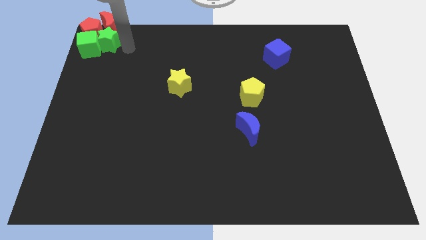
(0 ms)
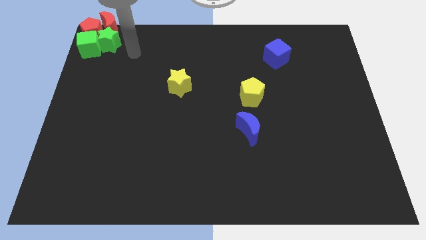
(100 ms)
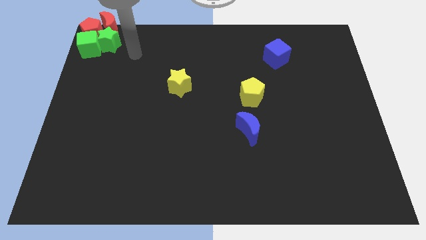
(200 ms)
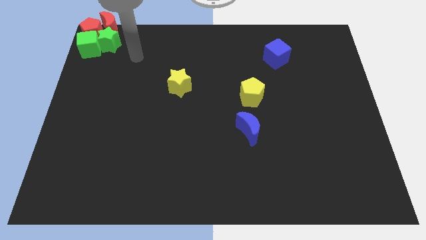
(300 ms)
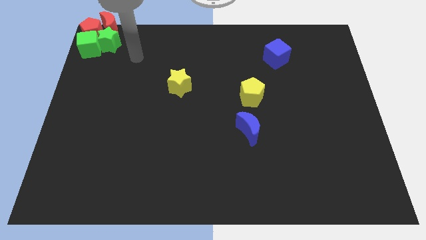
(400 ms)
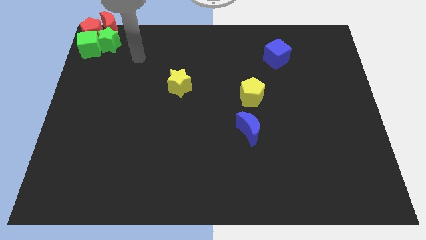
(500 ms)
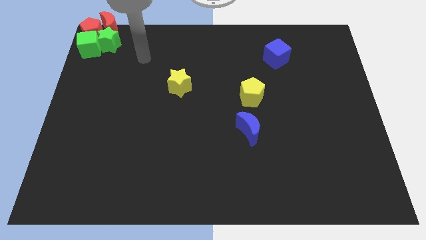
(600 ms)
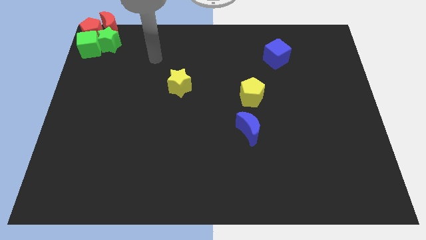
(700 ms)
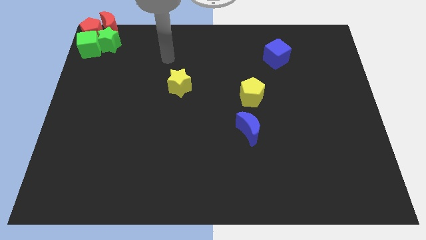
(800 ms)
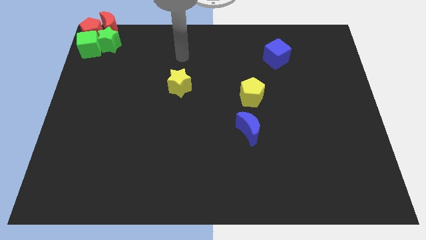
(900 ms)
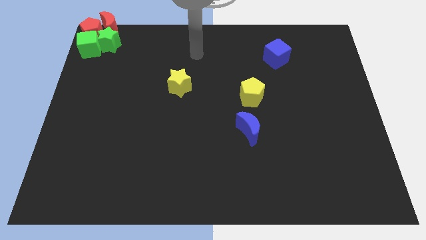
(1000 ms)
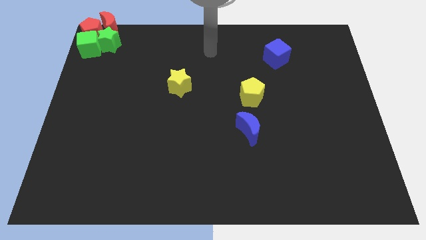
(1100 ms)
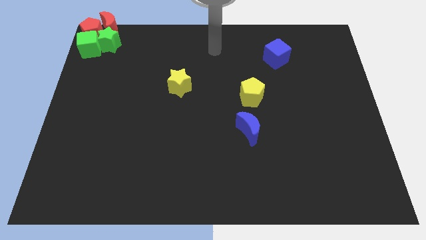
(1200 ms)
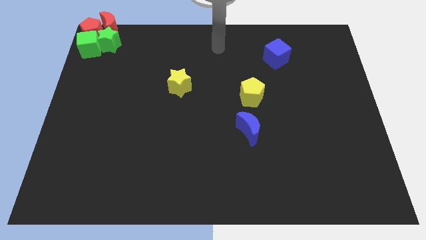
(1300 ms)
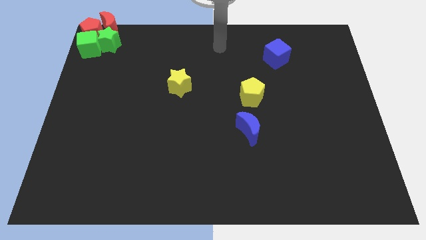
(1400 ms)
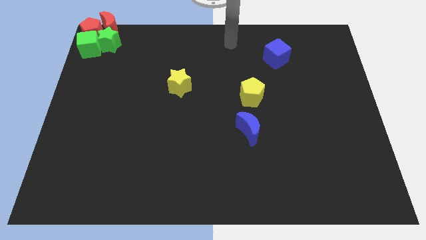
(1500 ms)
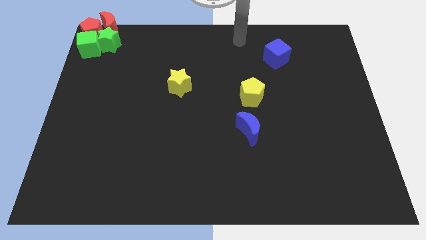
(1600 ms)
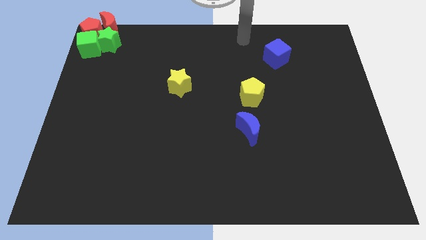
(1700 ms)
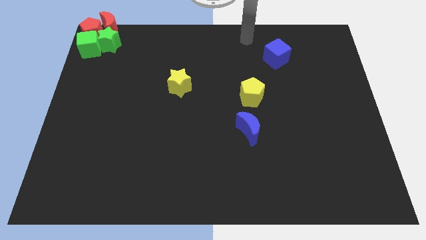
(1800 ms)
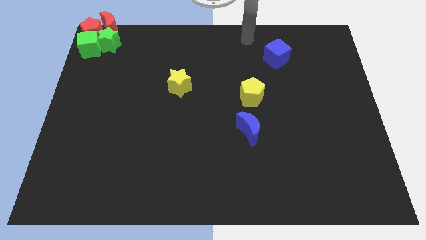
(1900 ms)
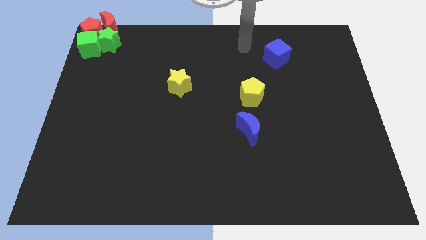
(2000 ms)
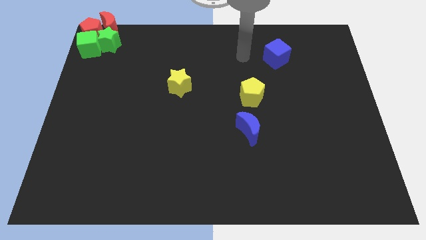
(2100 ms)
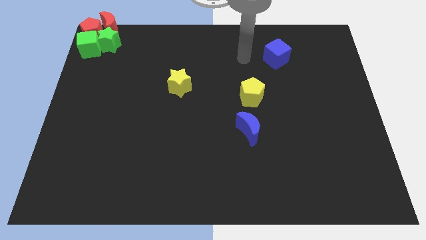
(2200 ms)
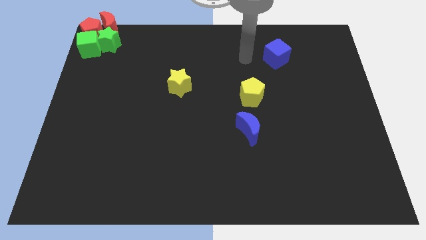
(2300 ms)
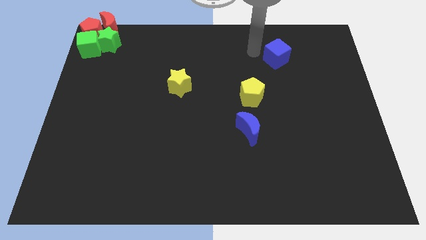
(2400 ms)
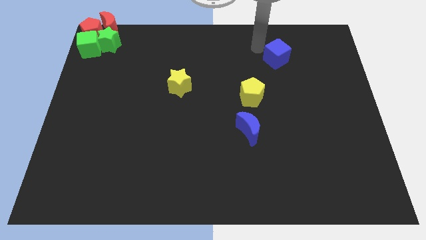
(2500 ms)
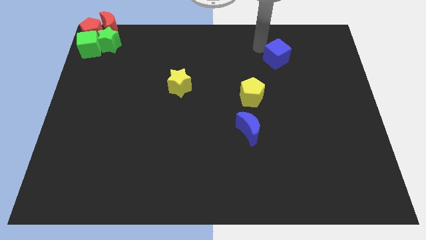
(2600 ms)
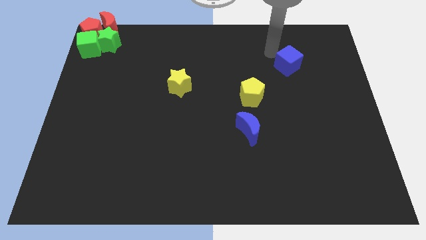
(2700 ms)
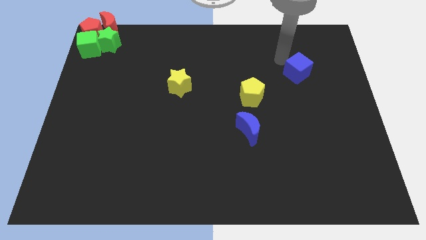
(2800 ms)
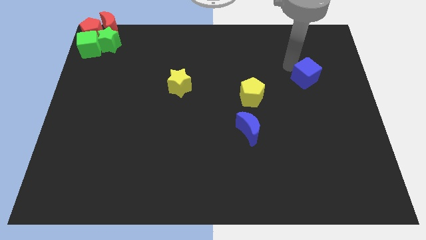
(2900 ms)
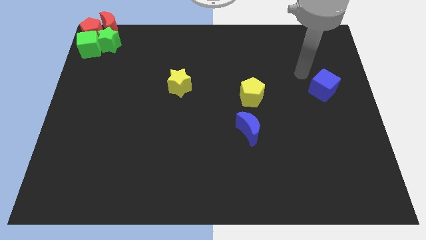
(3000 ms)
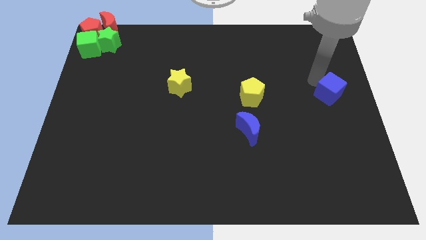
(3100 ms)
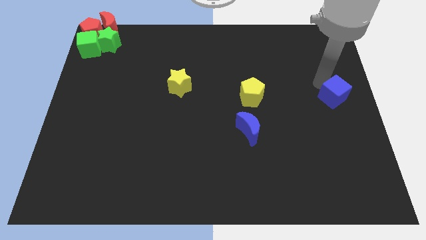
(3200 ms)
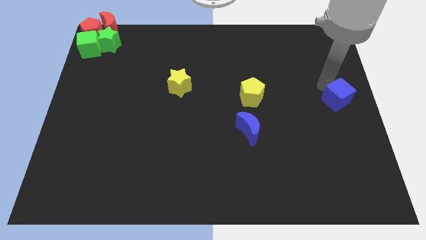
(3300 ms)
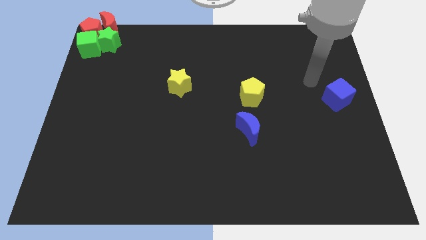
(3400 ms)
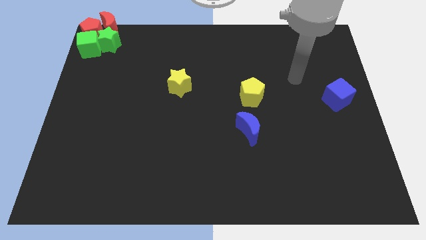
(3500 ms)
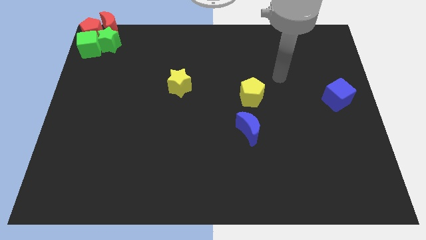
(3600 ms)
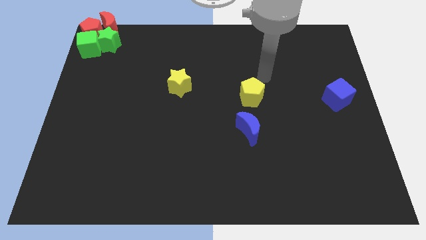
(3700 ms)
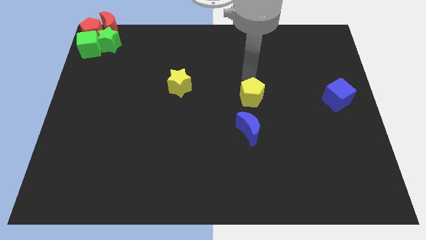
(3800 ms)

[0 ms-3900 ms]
move blue cube to the right center of the board

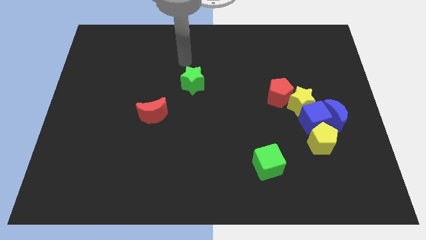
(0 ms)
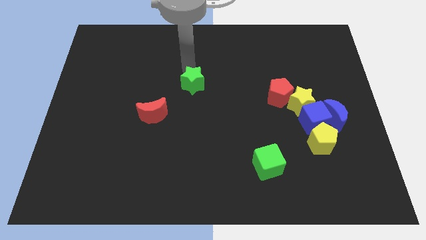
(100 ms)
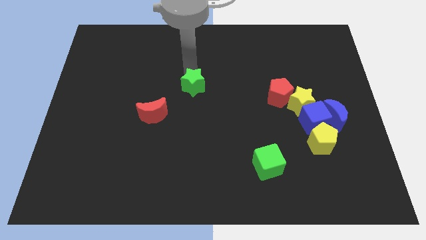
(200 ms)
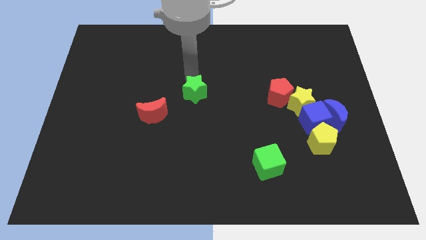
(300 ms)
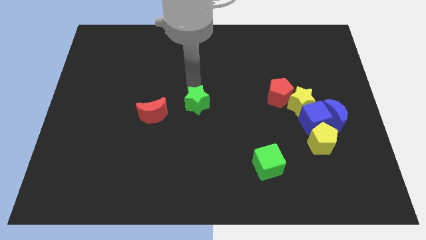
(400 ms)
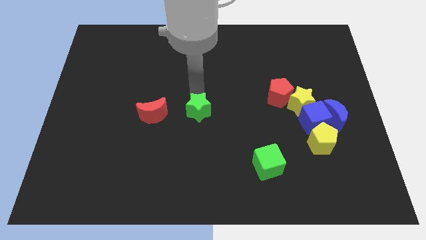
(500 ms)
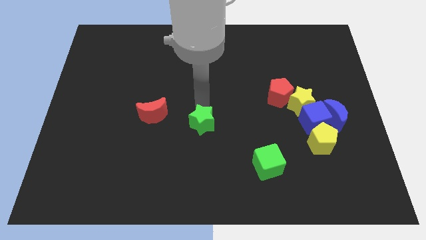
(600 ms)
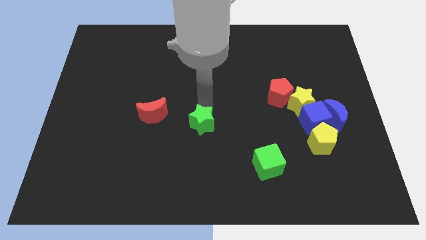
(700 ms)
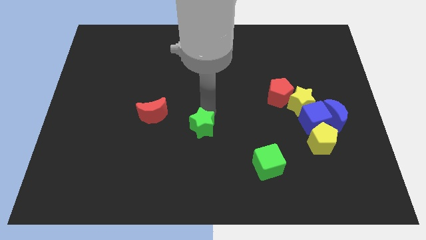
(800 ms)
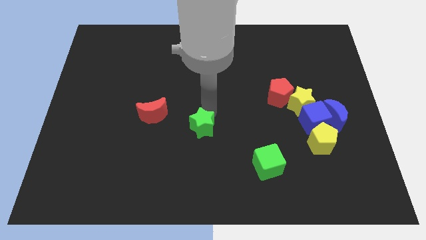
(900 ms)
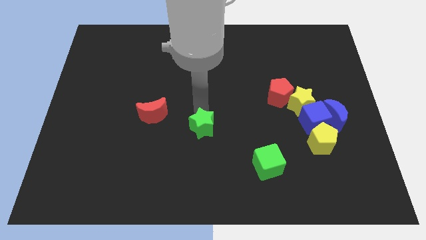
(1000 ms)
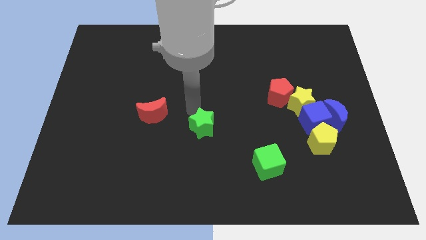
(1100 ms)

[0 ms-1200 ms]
move the green star to the downwards of the board

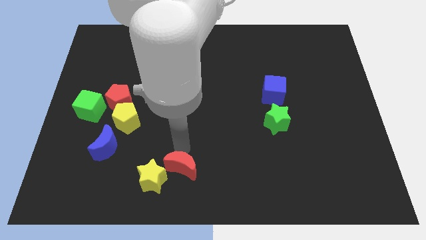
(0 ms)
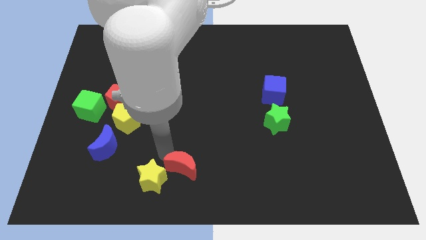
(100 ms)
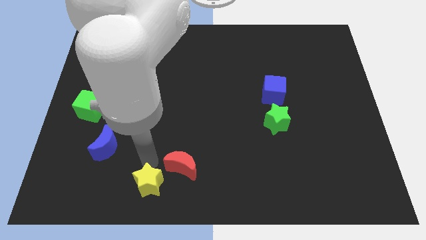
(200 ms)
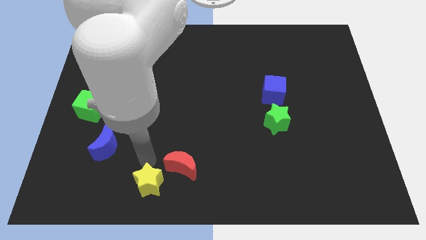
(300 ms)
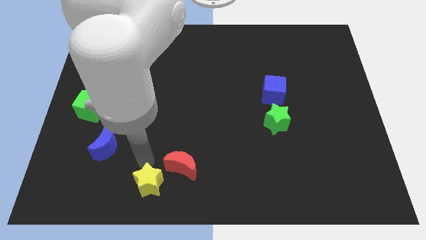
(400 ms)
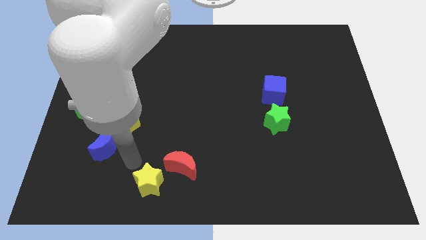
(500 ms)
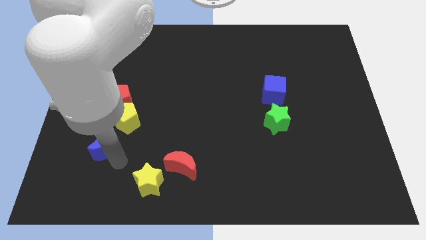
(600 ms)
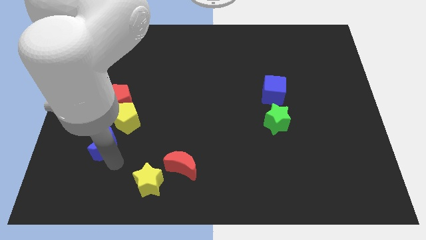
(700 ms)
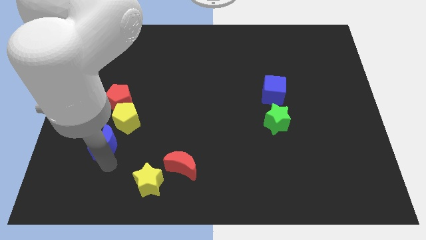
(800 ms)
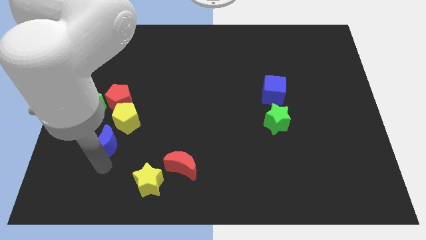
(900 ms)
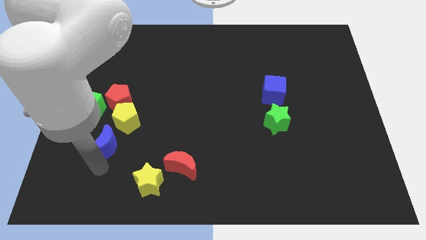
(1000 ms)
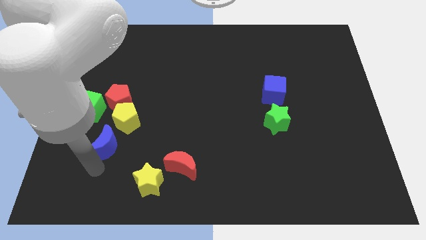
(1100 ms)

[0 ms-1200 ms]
slightly push the yellow star to the bottom left

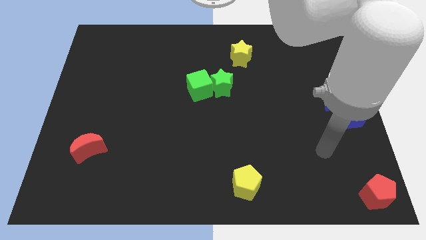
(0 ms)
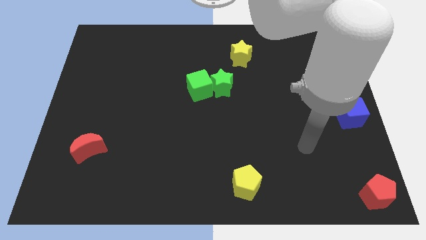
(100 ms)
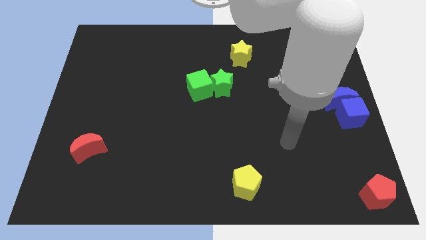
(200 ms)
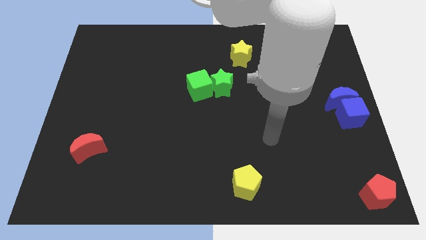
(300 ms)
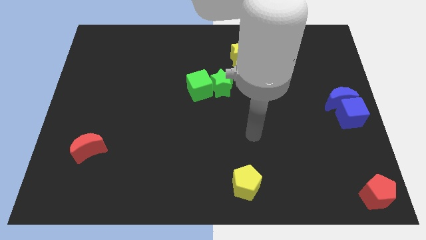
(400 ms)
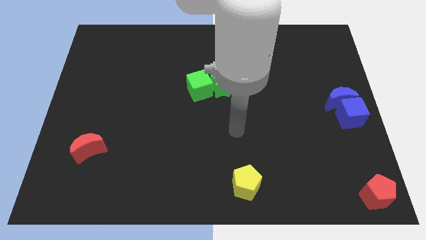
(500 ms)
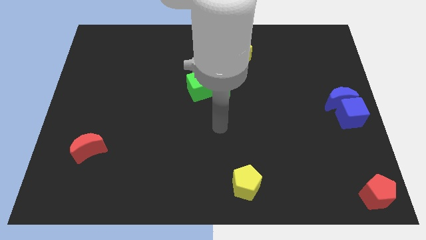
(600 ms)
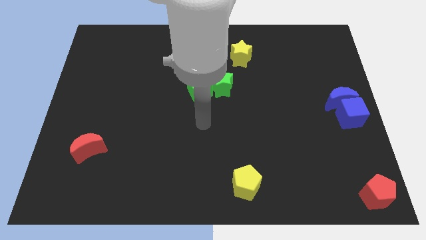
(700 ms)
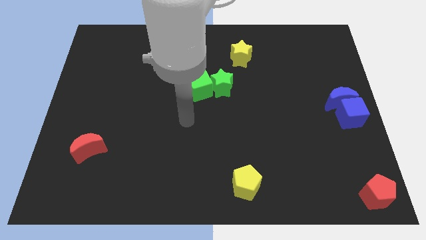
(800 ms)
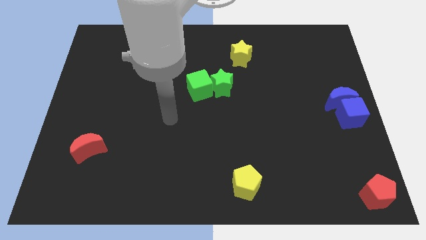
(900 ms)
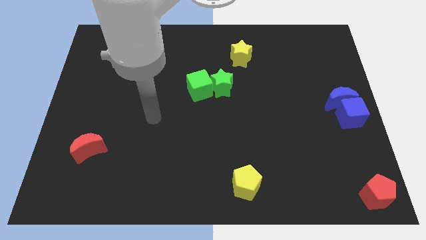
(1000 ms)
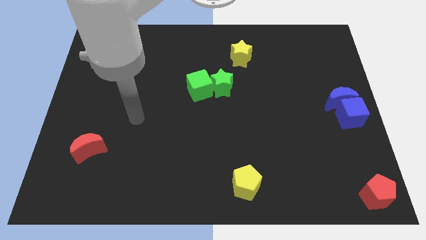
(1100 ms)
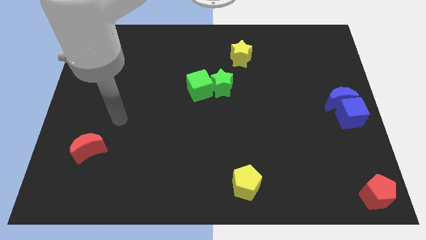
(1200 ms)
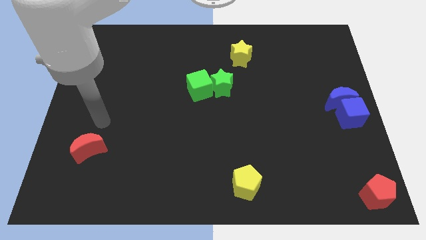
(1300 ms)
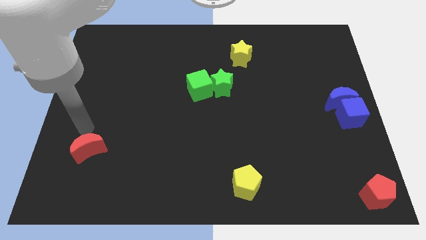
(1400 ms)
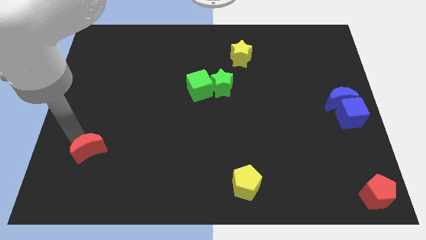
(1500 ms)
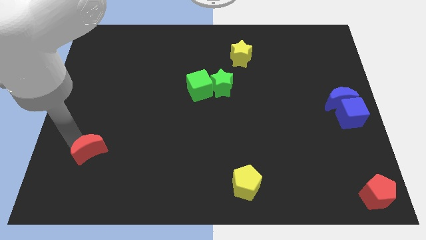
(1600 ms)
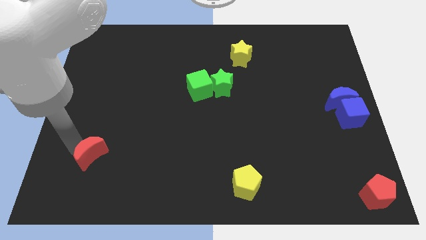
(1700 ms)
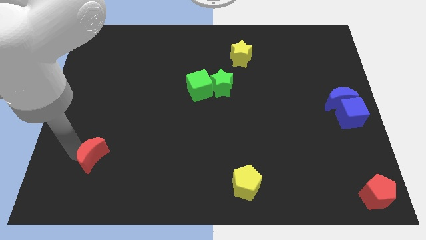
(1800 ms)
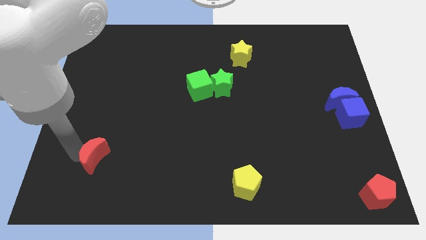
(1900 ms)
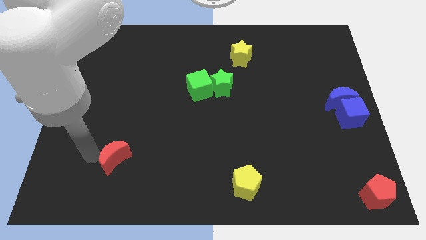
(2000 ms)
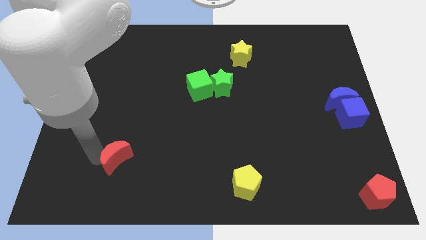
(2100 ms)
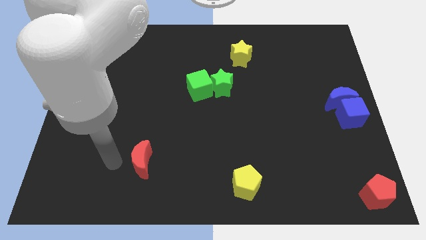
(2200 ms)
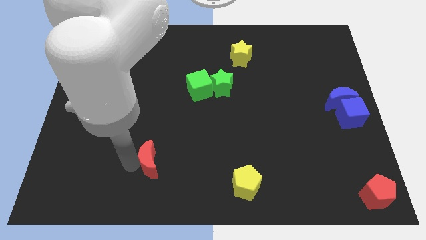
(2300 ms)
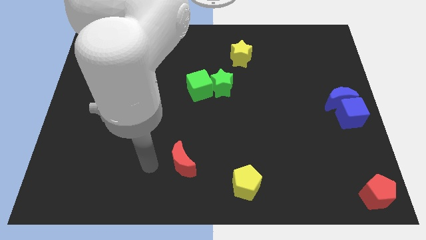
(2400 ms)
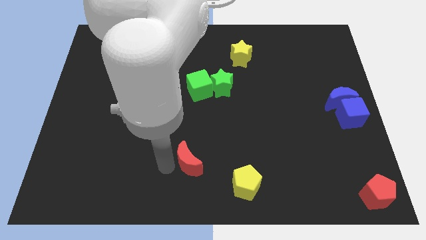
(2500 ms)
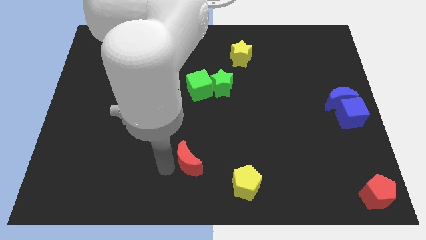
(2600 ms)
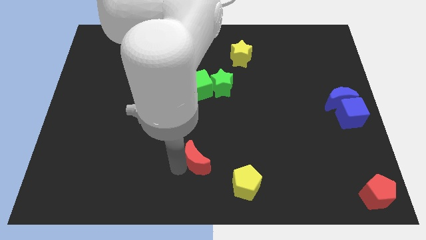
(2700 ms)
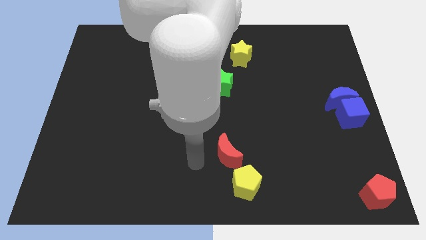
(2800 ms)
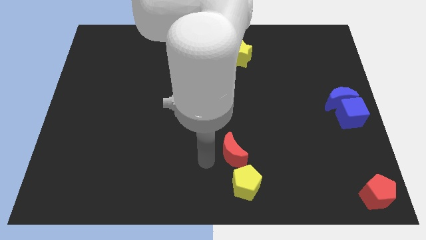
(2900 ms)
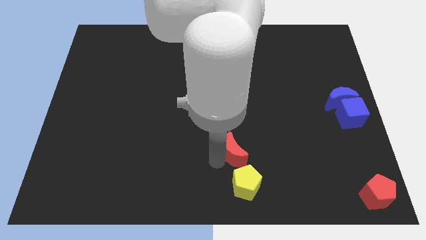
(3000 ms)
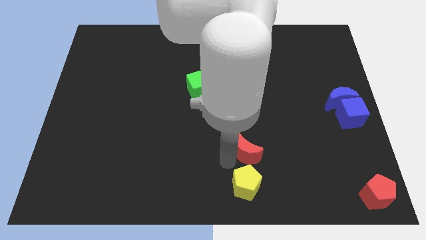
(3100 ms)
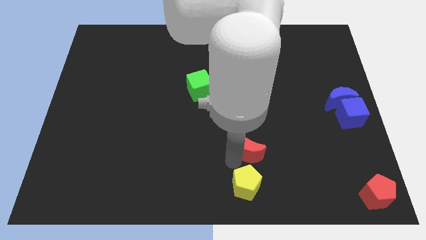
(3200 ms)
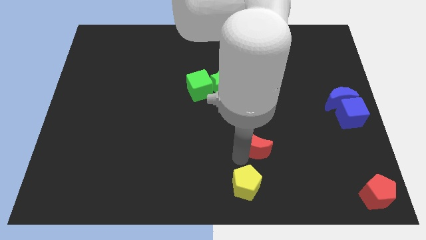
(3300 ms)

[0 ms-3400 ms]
put the red moon to the top side of the yellow pentagon
